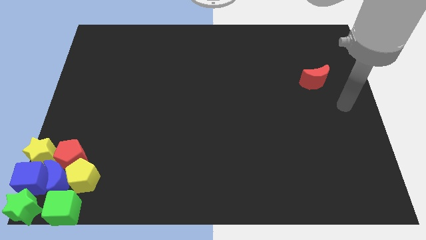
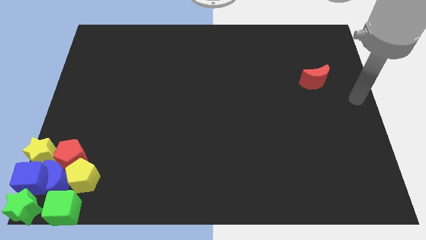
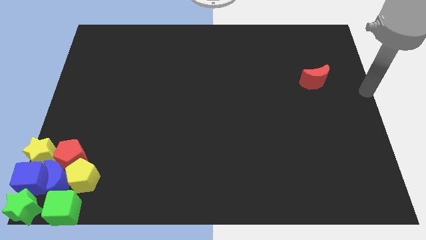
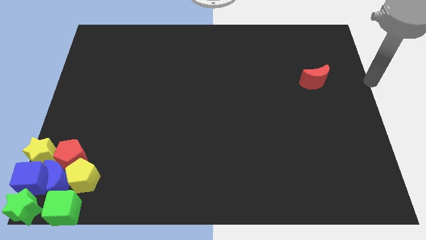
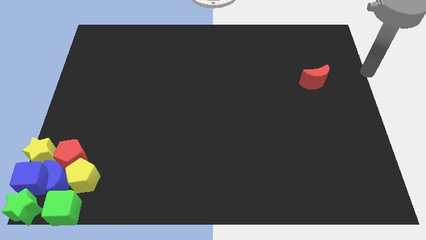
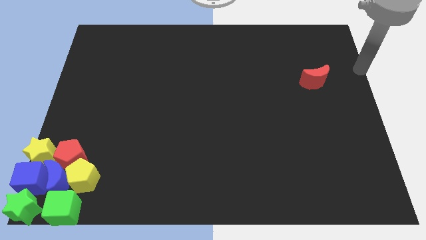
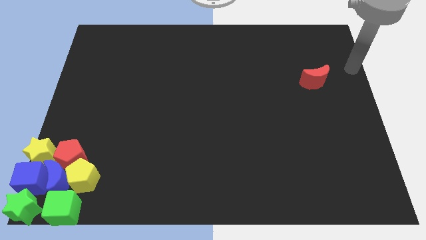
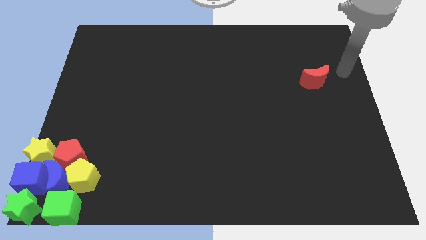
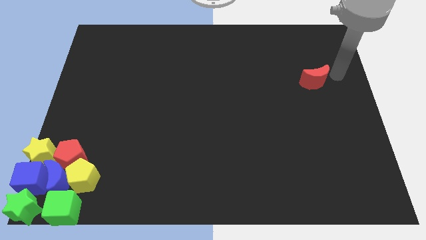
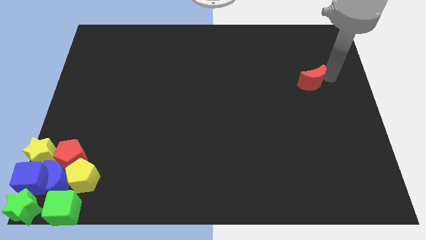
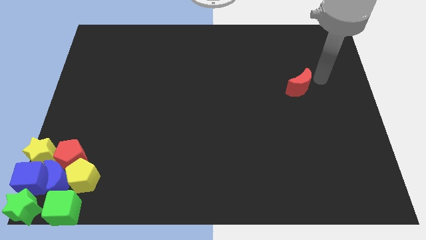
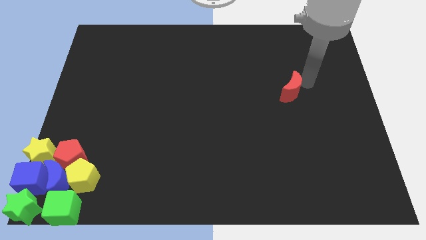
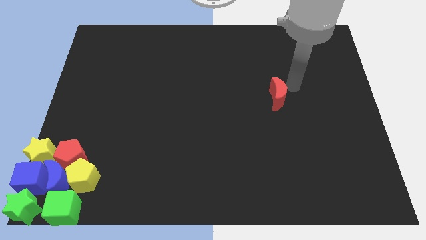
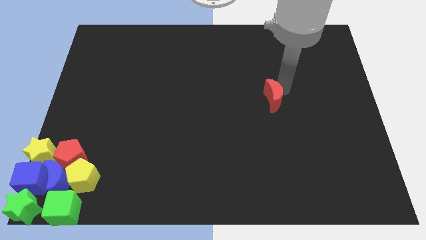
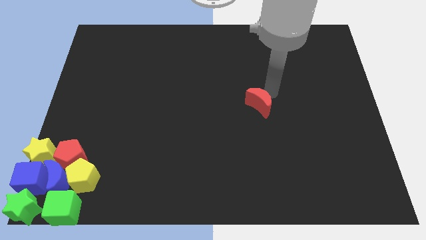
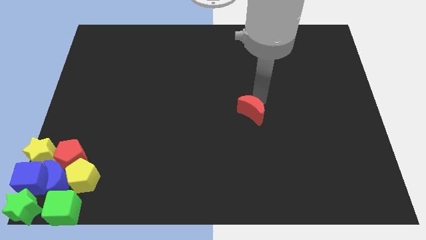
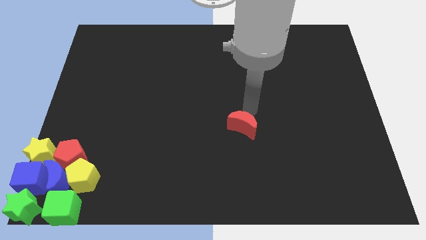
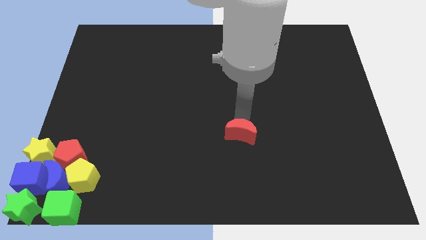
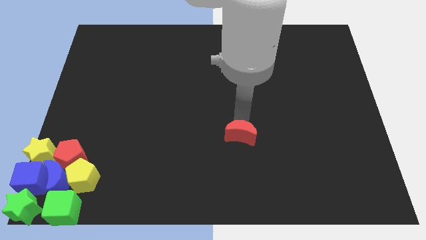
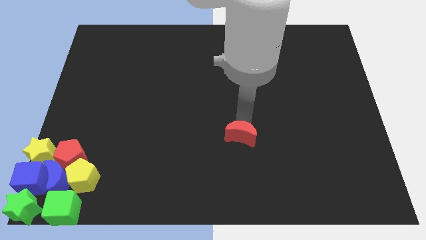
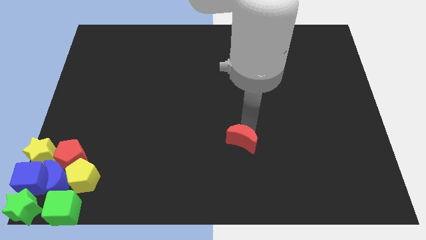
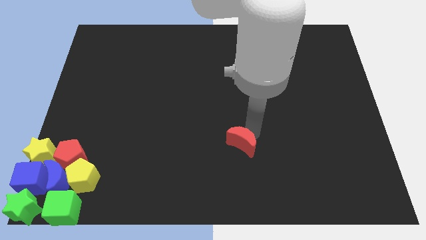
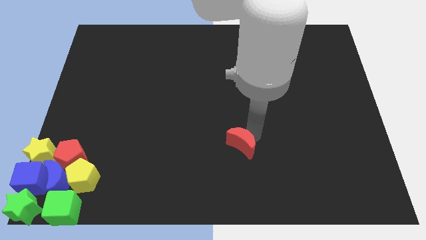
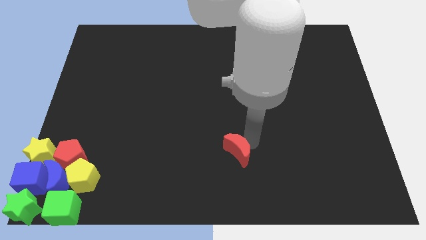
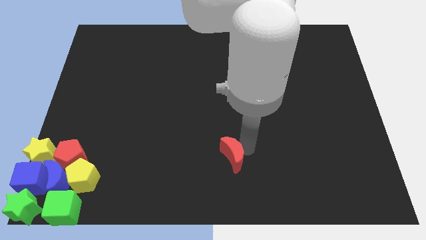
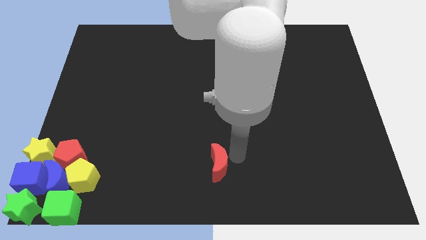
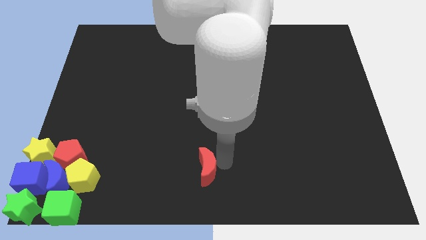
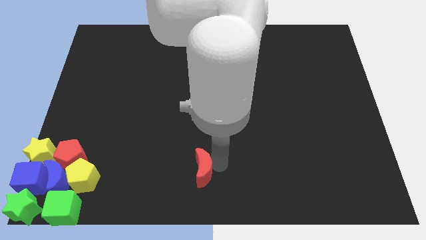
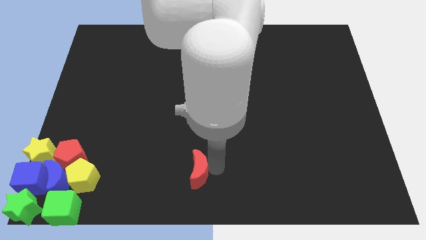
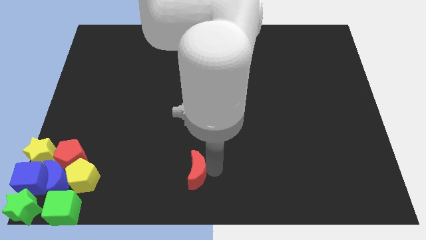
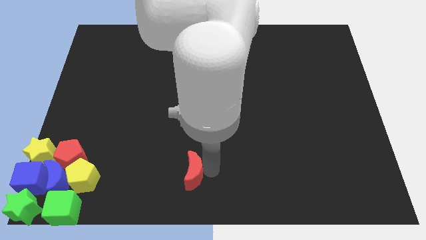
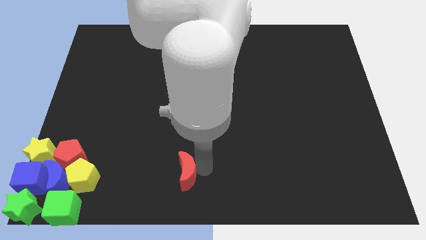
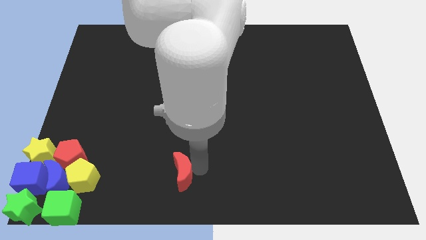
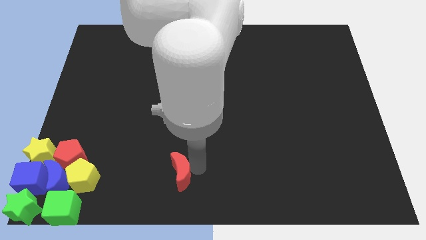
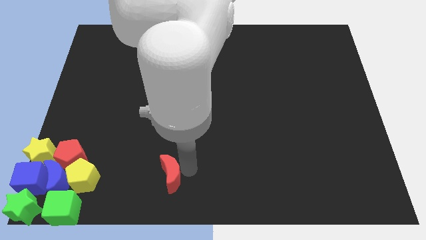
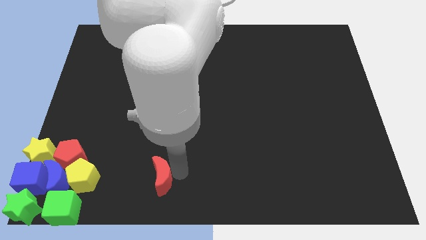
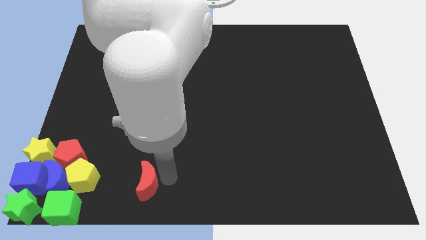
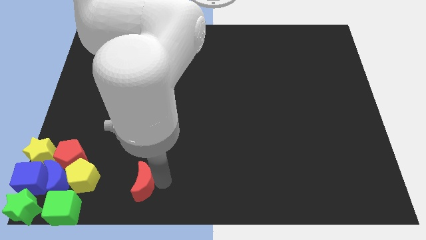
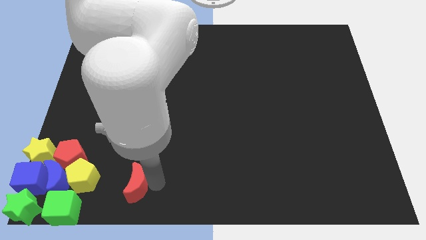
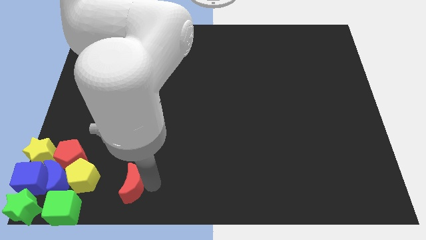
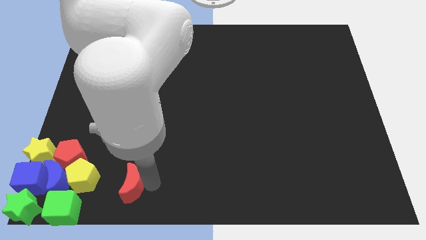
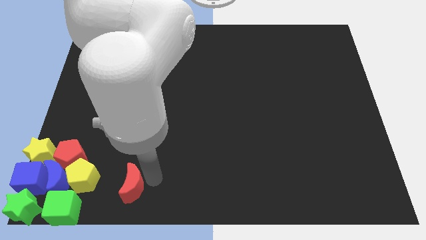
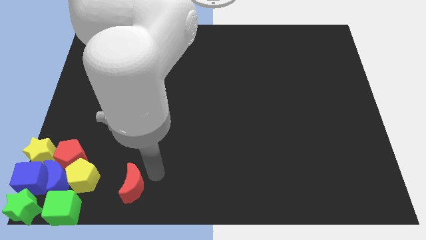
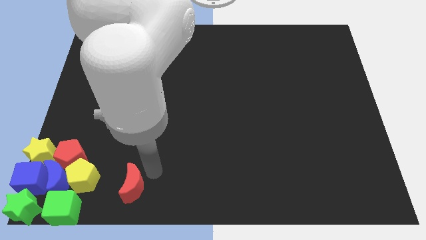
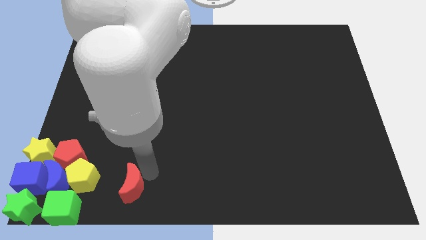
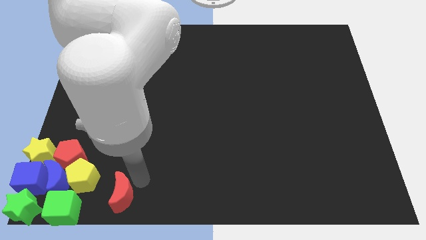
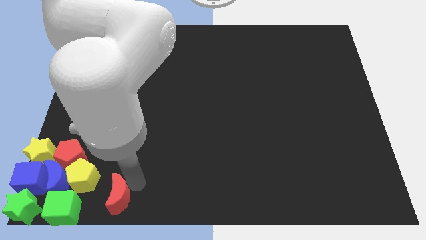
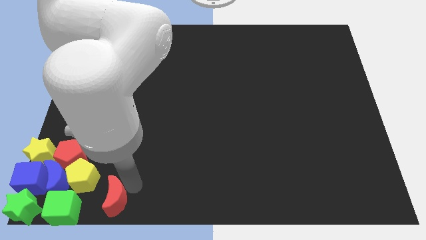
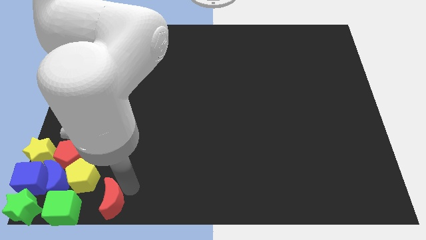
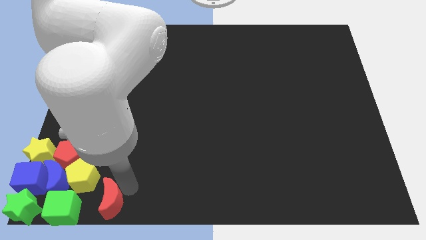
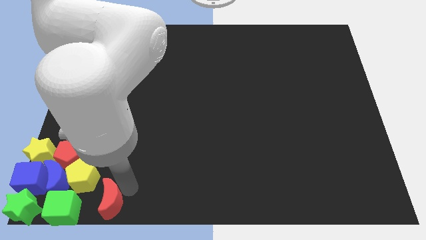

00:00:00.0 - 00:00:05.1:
place red half moon to bottom left of the board

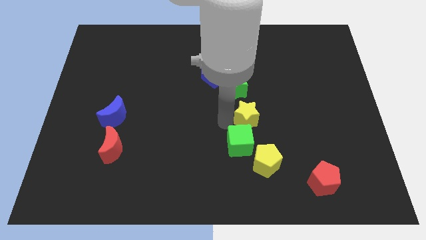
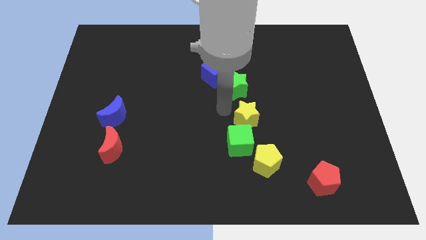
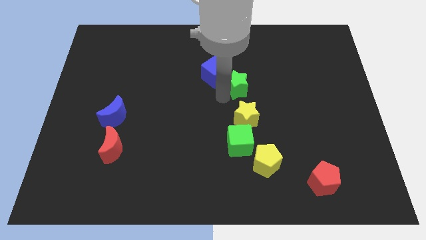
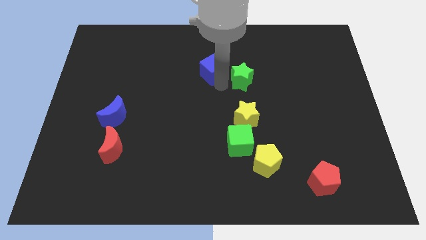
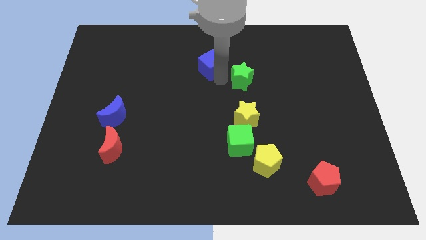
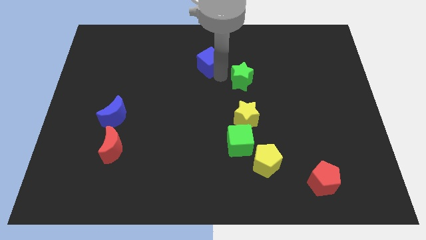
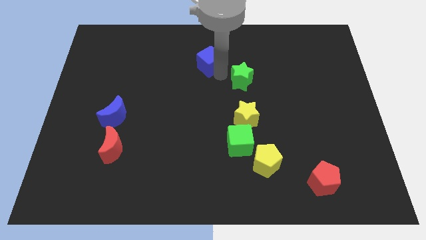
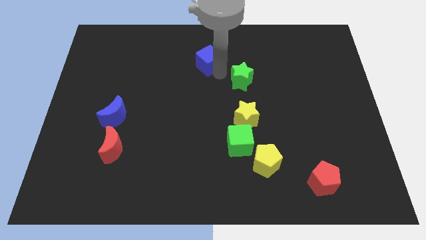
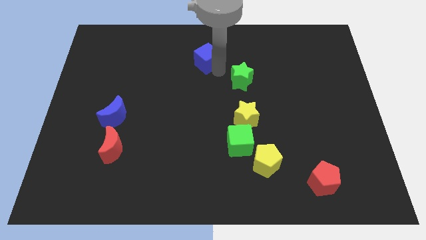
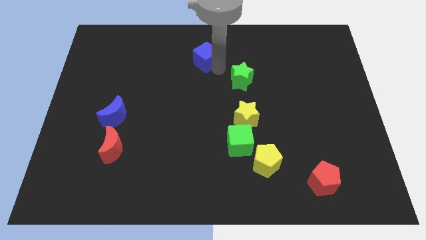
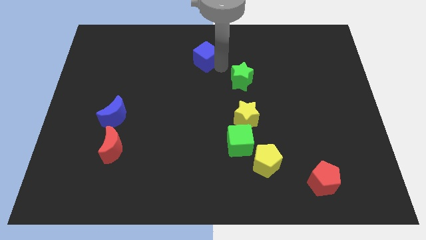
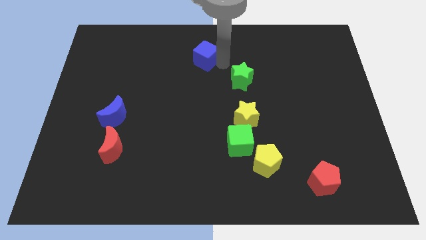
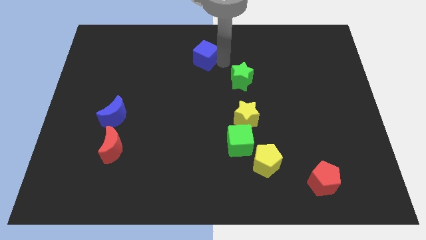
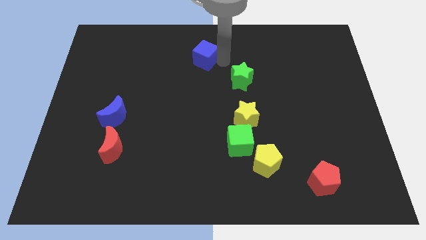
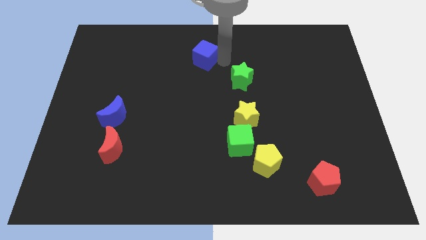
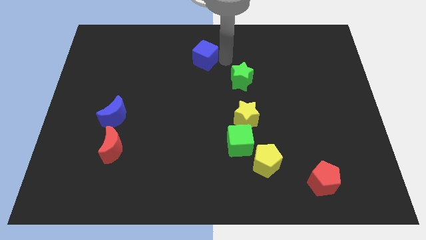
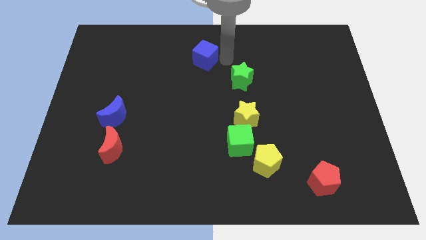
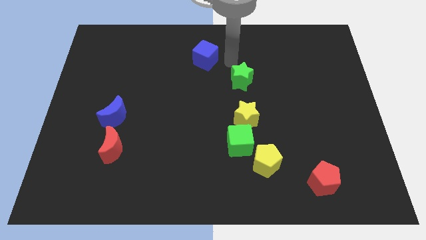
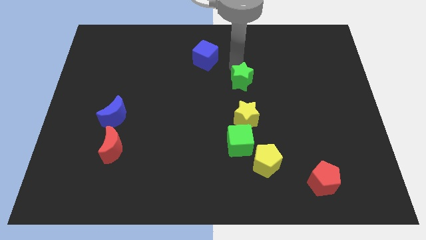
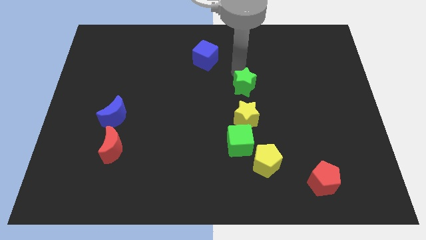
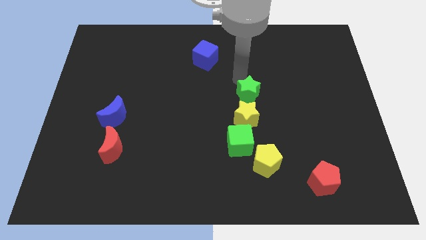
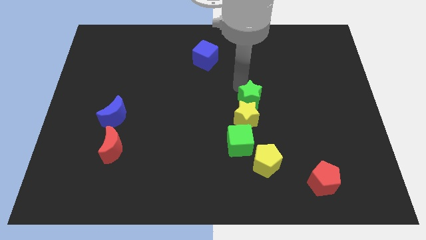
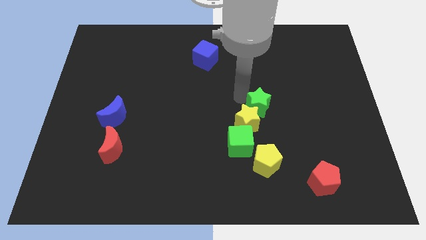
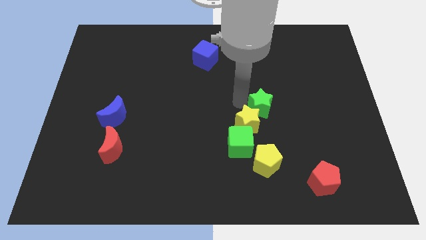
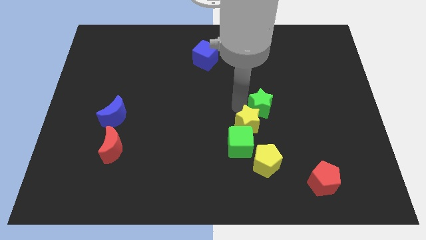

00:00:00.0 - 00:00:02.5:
separate the blue cube and green star

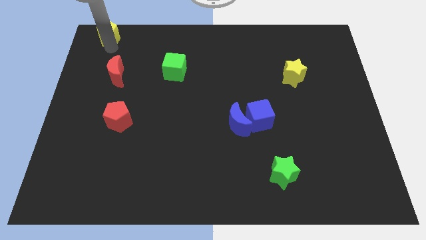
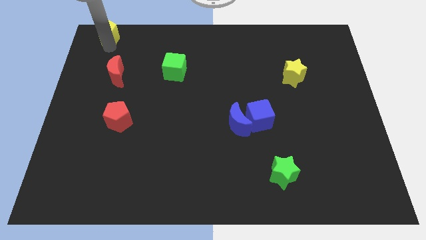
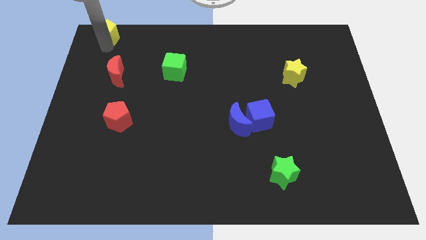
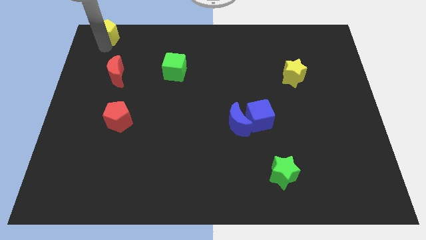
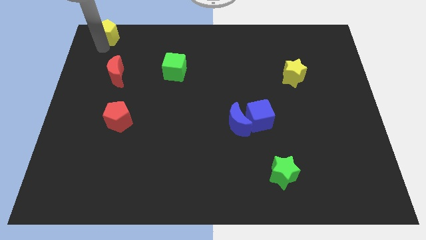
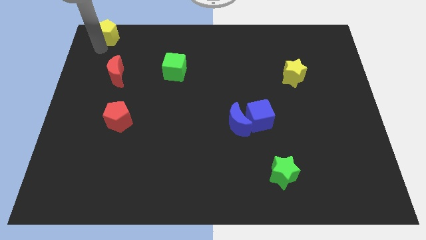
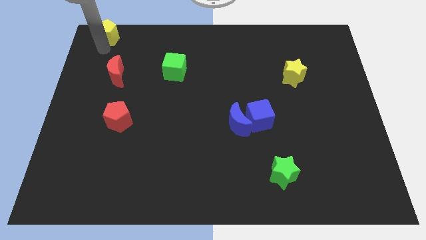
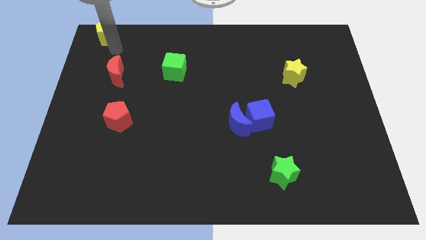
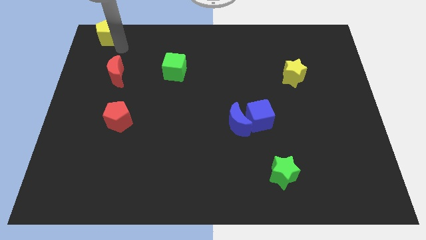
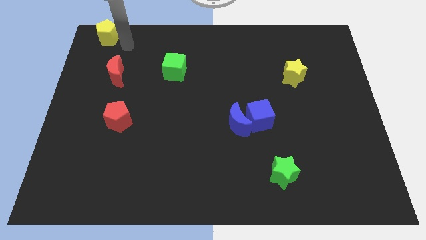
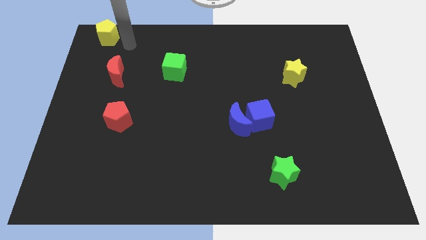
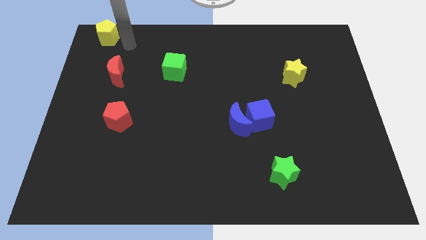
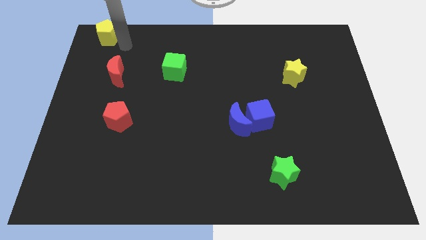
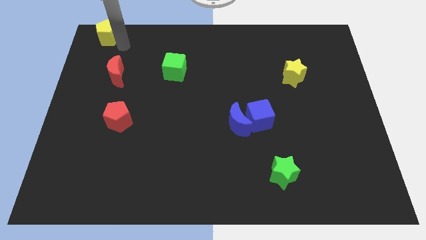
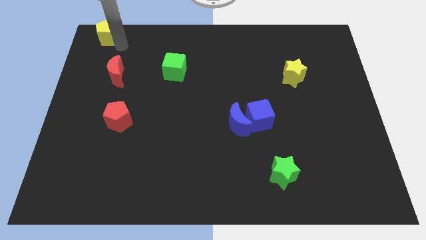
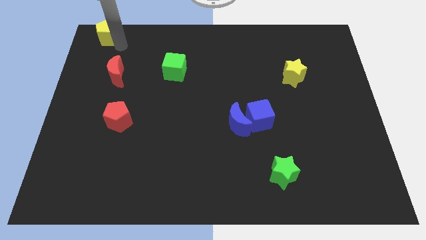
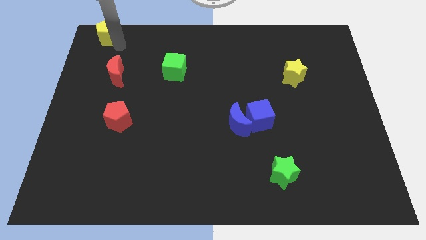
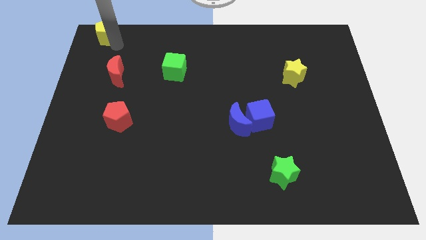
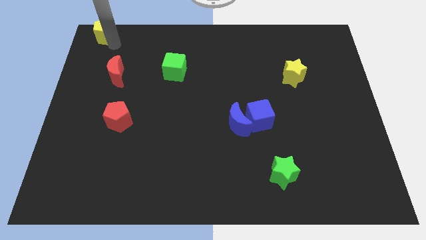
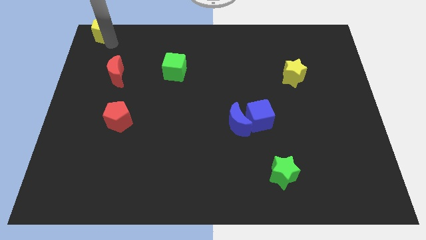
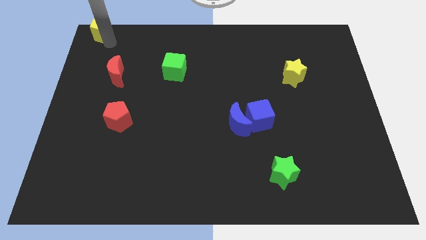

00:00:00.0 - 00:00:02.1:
move yellow pentagon to the top left corner
